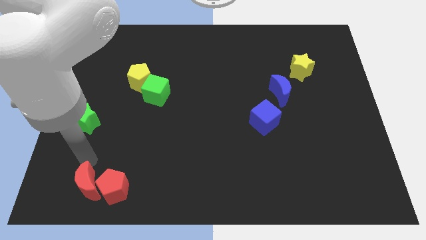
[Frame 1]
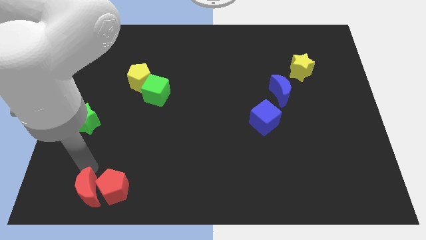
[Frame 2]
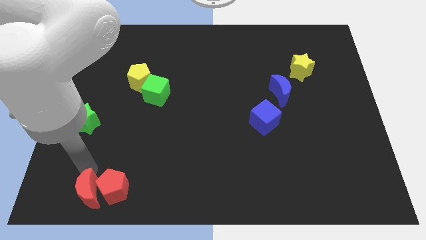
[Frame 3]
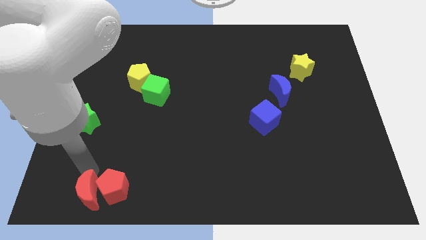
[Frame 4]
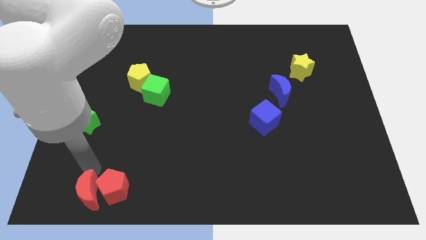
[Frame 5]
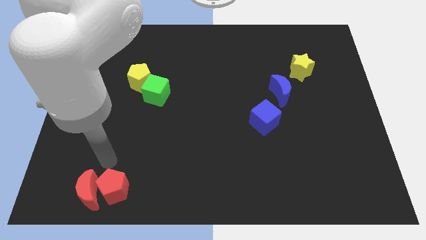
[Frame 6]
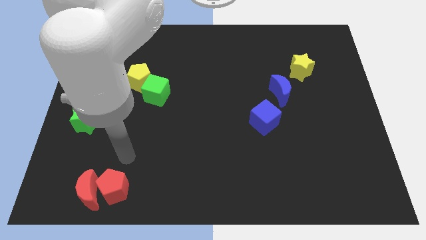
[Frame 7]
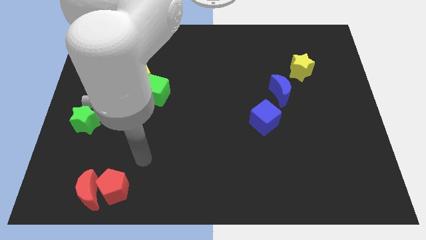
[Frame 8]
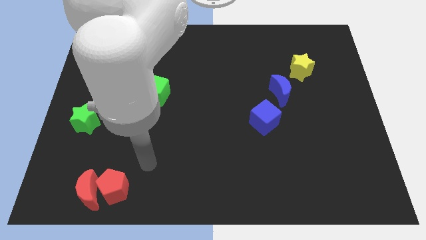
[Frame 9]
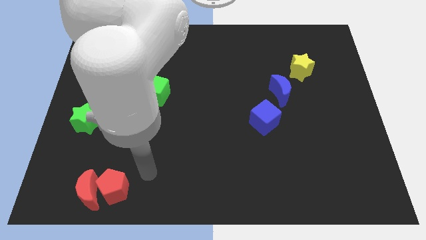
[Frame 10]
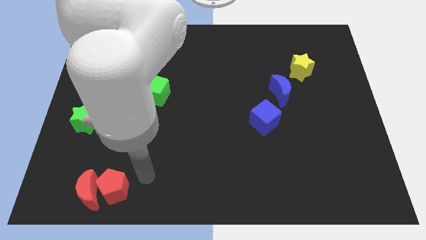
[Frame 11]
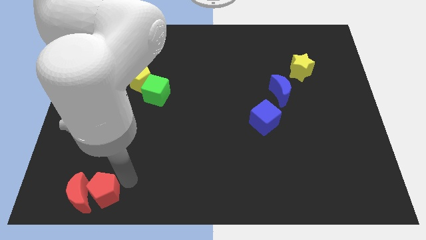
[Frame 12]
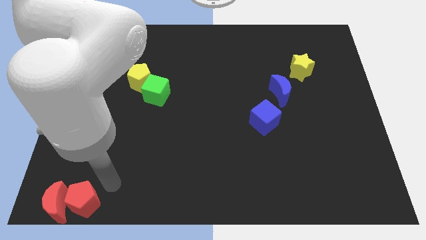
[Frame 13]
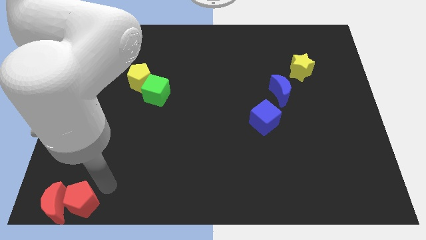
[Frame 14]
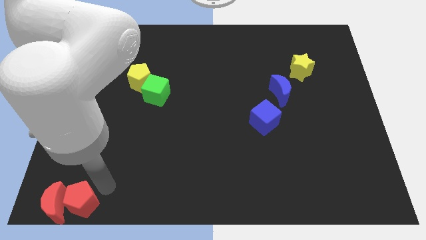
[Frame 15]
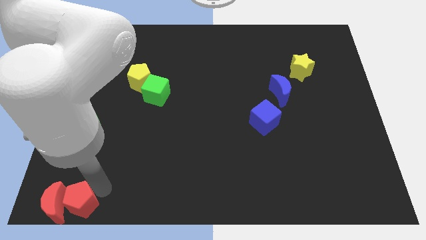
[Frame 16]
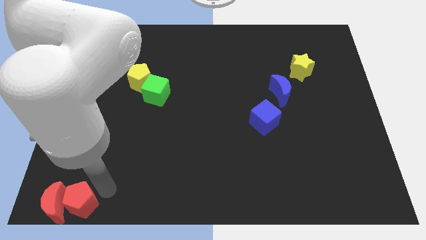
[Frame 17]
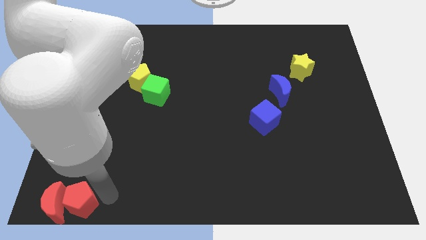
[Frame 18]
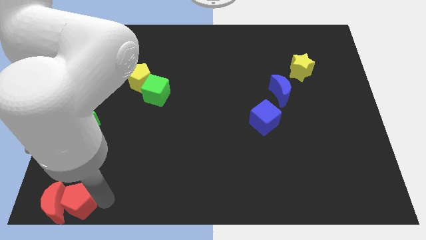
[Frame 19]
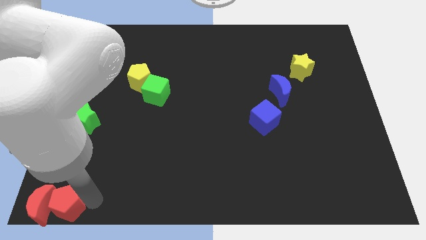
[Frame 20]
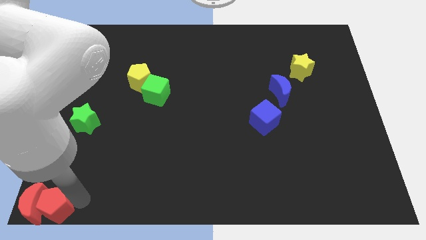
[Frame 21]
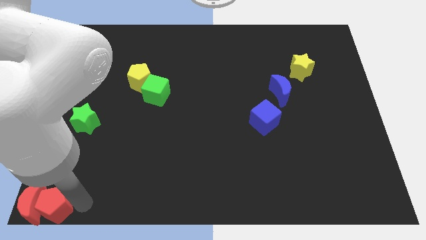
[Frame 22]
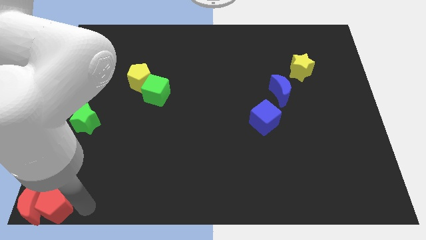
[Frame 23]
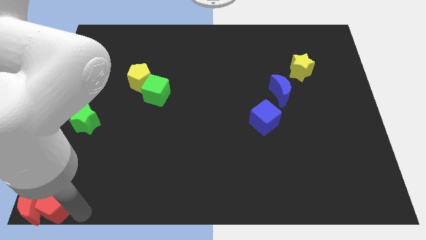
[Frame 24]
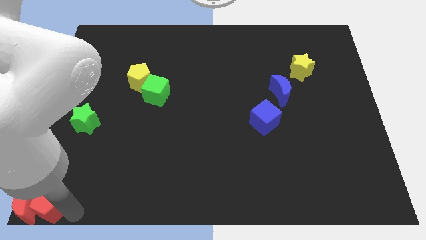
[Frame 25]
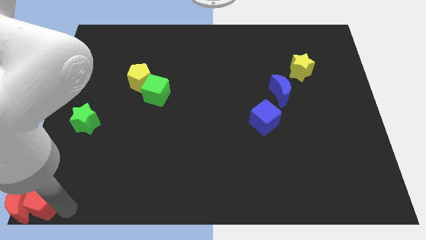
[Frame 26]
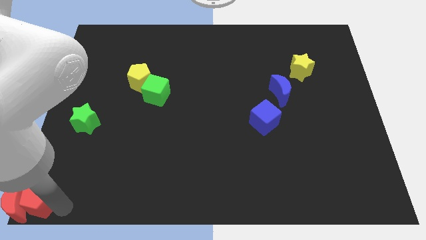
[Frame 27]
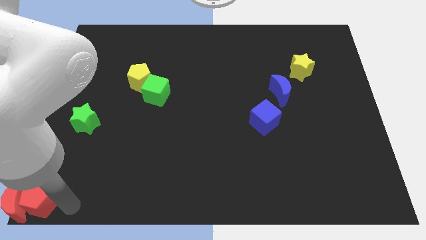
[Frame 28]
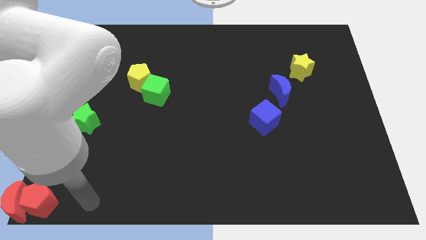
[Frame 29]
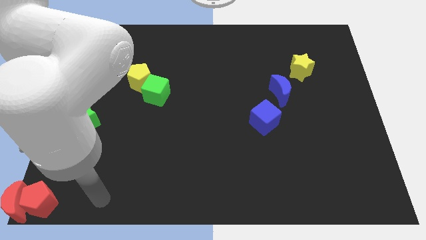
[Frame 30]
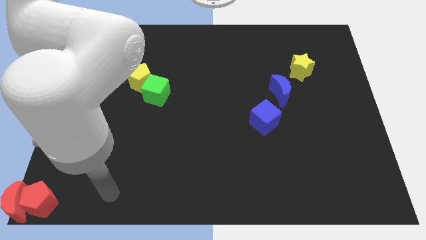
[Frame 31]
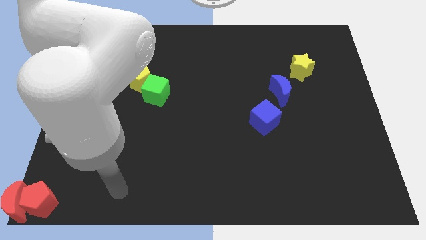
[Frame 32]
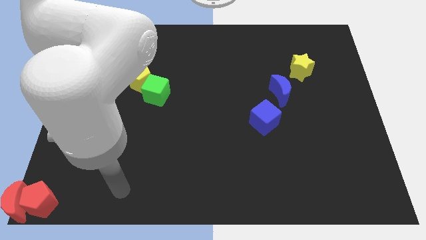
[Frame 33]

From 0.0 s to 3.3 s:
put the red blocks at the bottom left corner

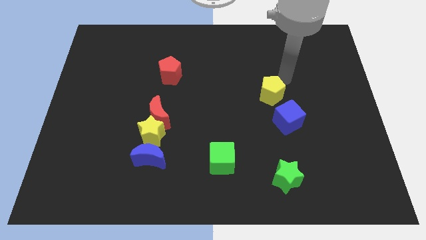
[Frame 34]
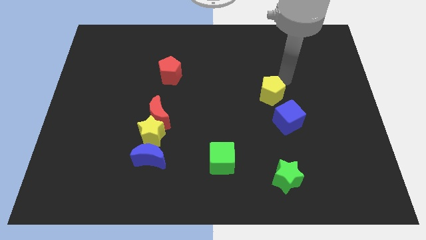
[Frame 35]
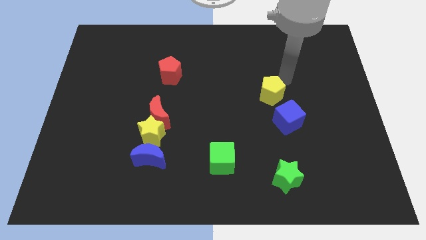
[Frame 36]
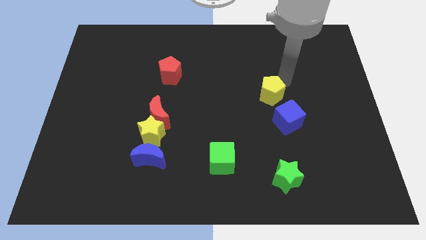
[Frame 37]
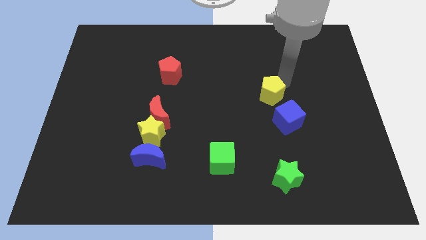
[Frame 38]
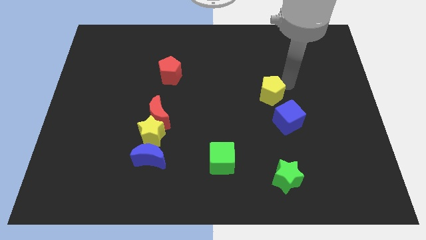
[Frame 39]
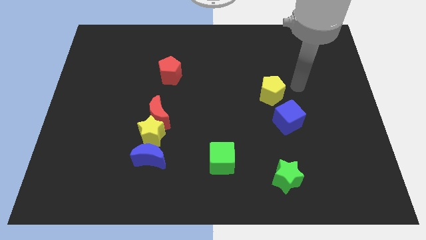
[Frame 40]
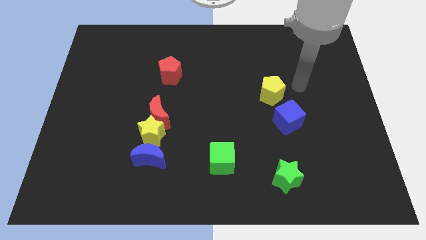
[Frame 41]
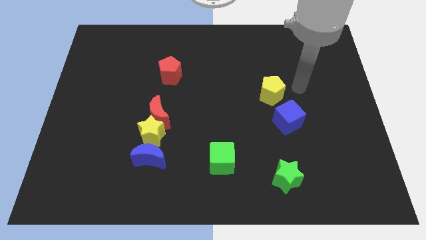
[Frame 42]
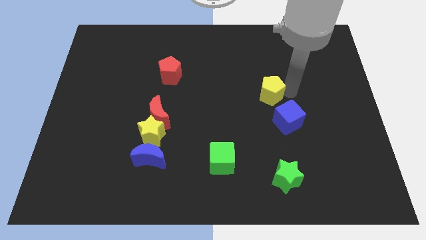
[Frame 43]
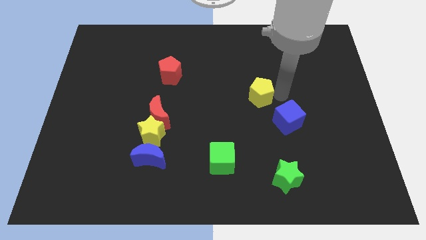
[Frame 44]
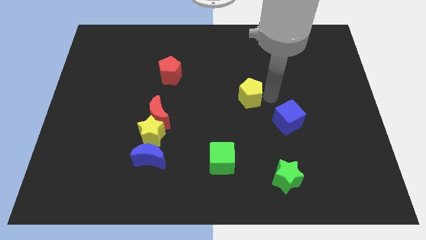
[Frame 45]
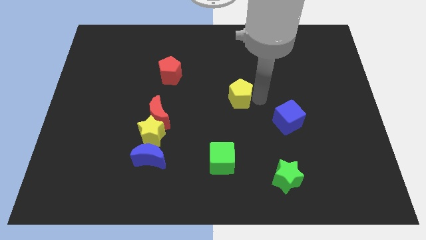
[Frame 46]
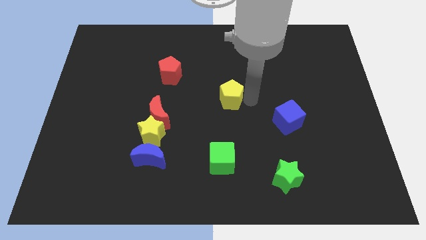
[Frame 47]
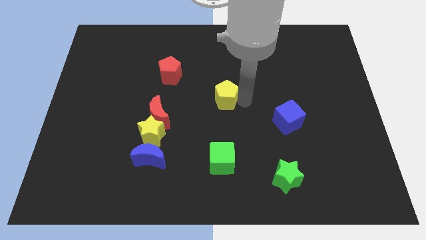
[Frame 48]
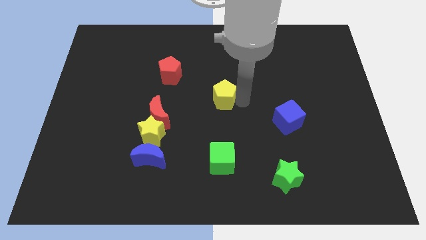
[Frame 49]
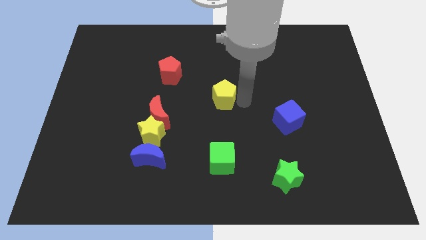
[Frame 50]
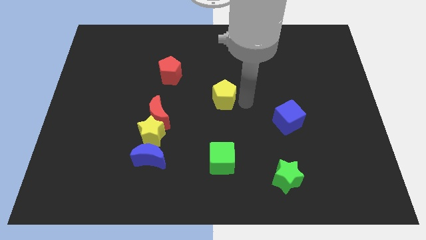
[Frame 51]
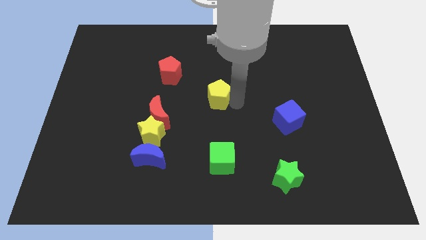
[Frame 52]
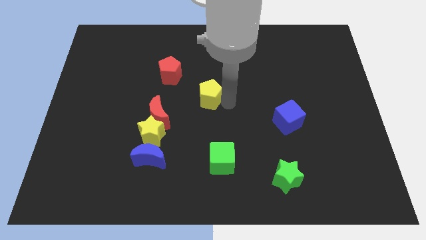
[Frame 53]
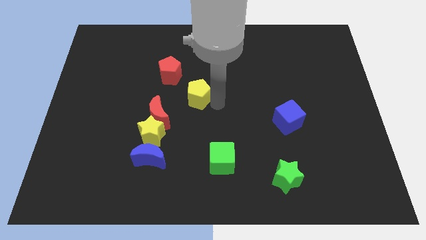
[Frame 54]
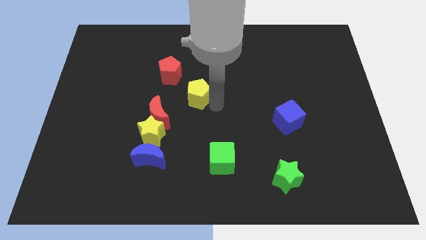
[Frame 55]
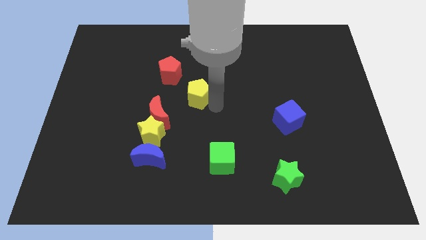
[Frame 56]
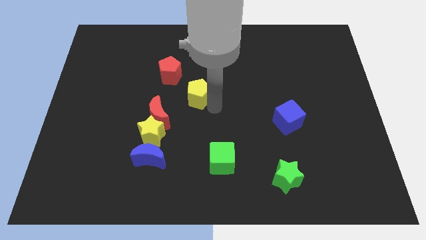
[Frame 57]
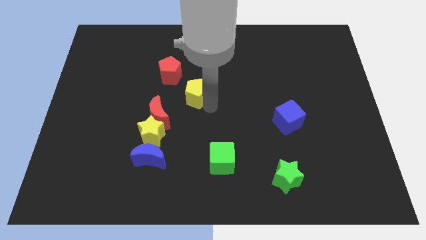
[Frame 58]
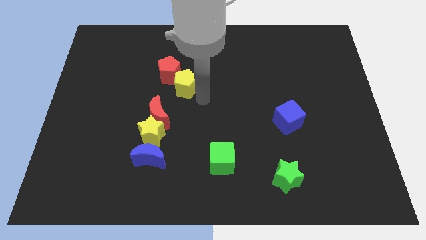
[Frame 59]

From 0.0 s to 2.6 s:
place yellow pentagon diagonal to red pentagon

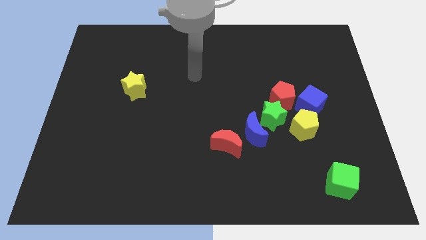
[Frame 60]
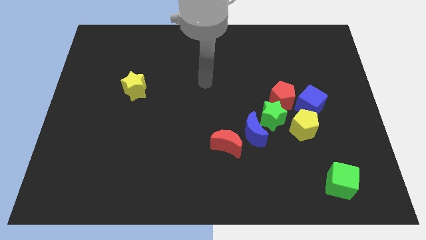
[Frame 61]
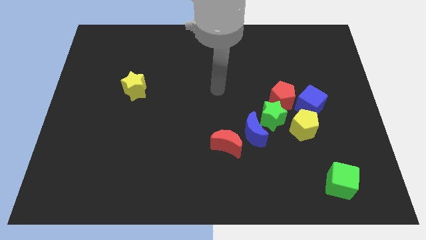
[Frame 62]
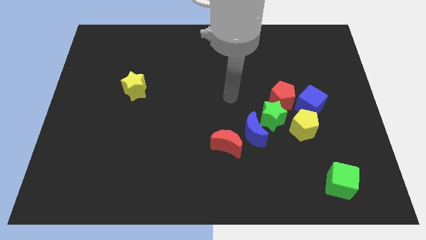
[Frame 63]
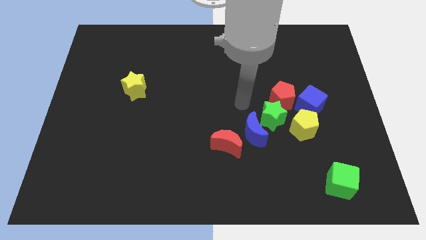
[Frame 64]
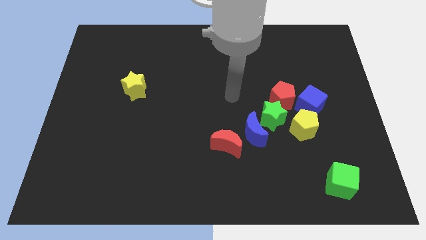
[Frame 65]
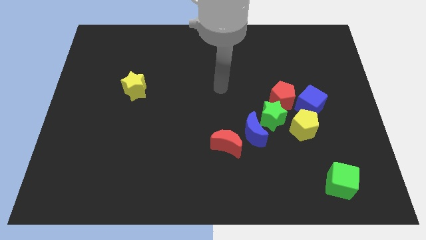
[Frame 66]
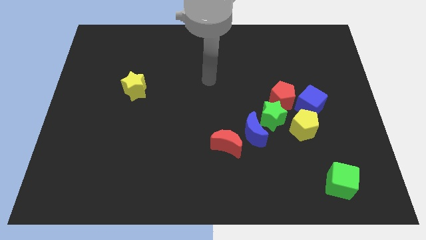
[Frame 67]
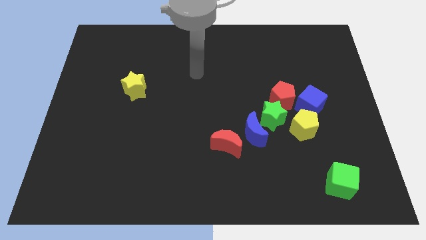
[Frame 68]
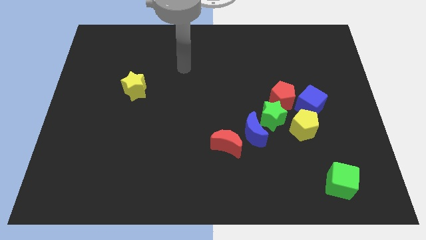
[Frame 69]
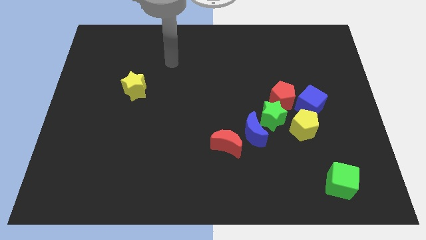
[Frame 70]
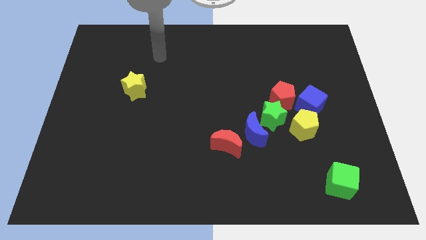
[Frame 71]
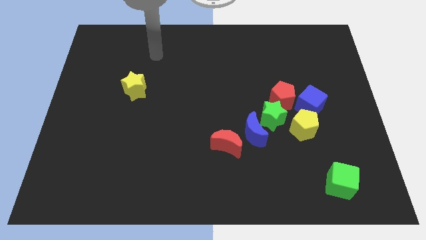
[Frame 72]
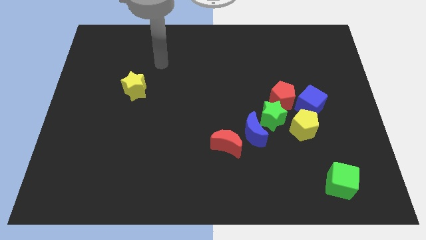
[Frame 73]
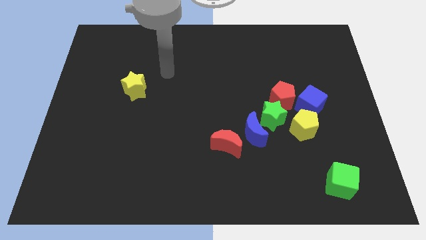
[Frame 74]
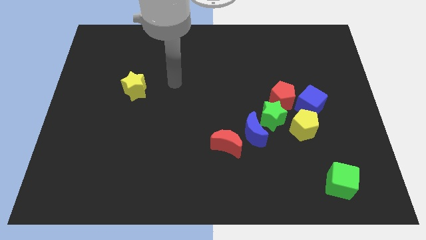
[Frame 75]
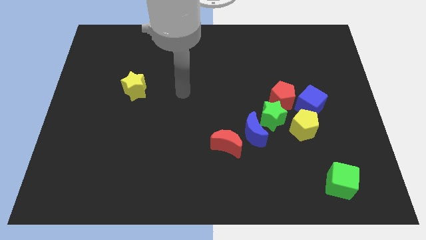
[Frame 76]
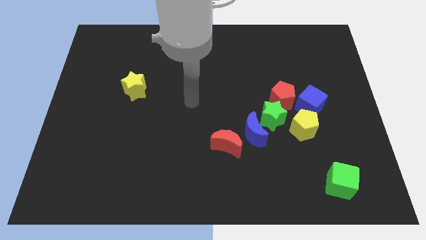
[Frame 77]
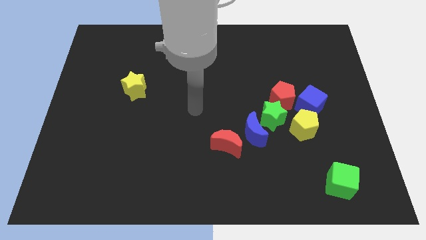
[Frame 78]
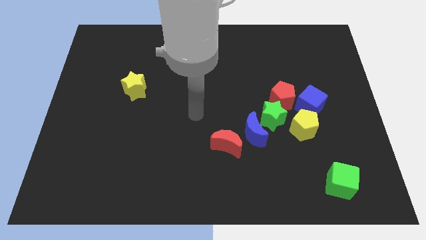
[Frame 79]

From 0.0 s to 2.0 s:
move your arm to the center of the board

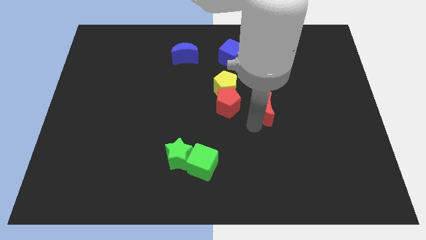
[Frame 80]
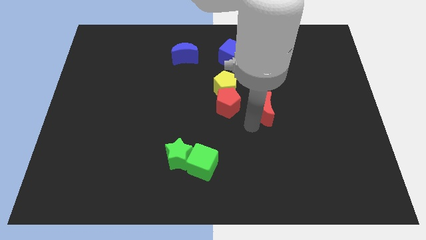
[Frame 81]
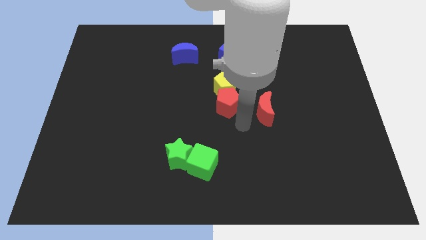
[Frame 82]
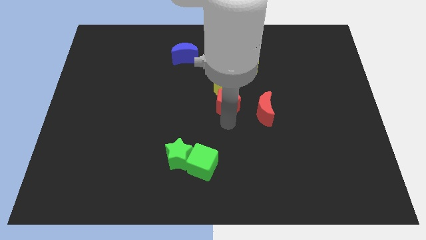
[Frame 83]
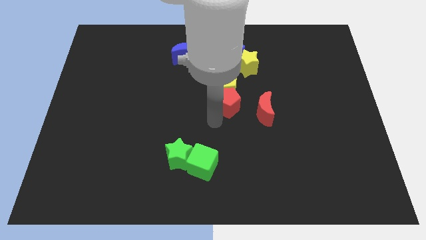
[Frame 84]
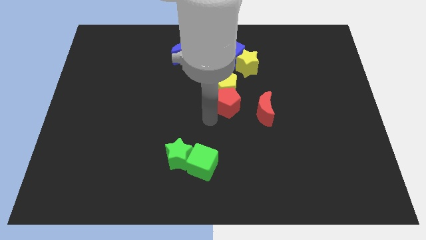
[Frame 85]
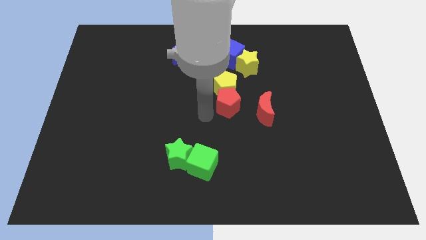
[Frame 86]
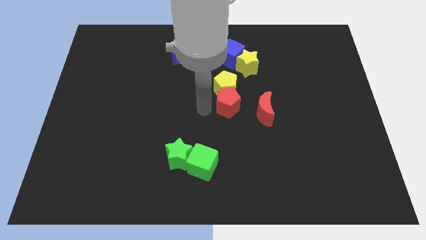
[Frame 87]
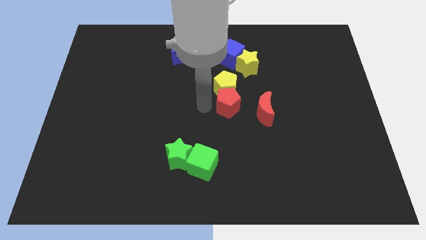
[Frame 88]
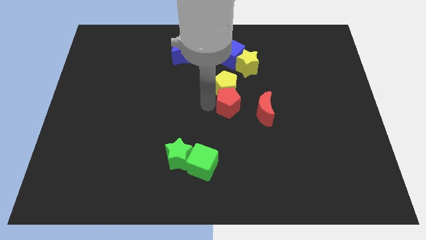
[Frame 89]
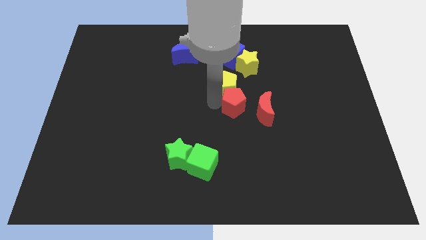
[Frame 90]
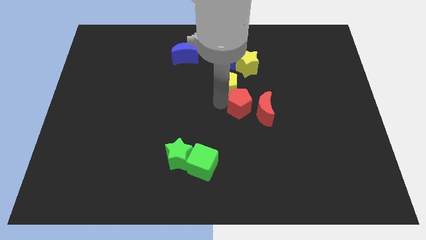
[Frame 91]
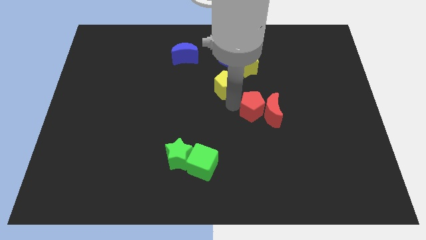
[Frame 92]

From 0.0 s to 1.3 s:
separate the red pentagon from the yellow pentagon
